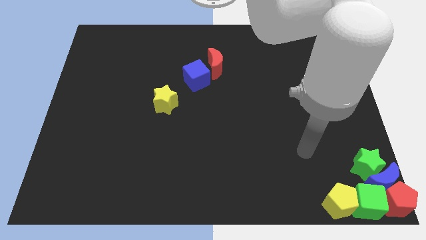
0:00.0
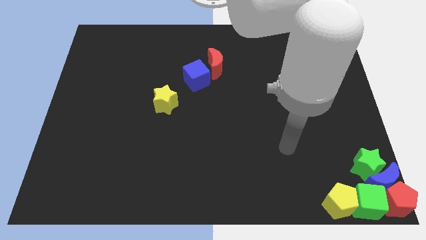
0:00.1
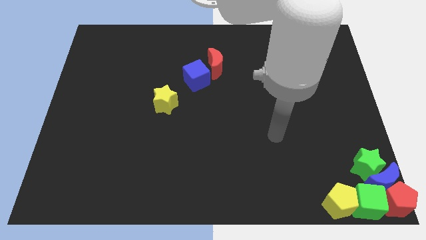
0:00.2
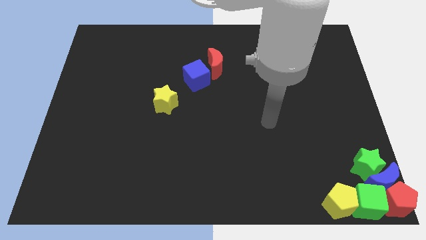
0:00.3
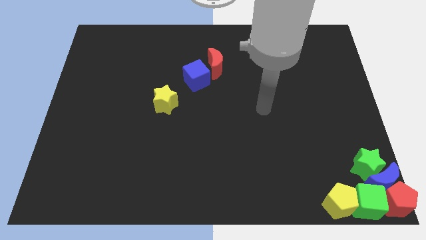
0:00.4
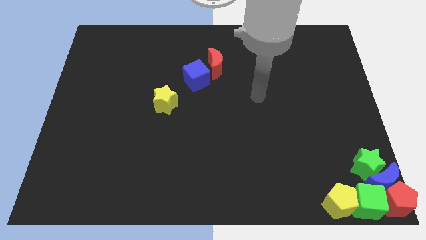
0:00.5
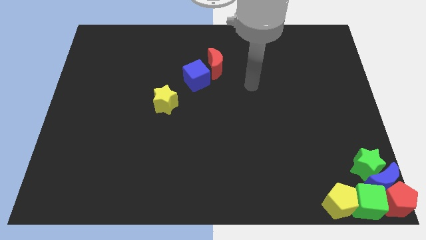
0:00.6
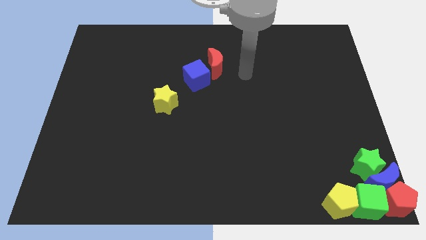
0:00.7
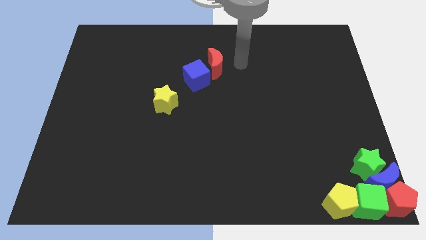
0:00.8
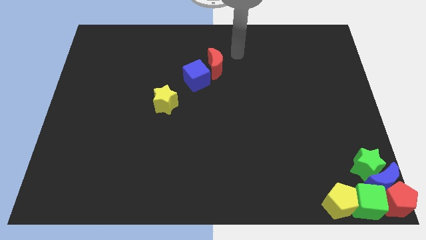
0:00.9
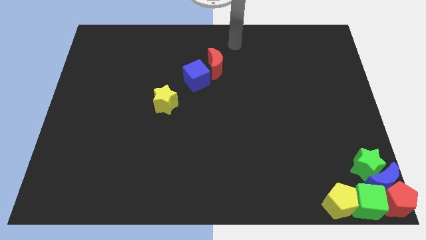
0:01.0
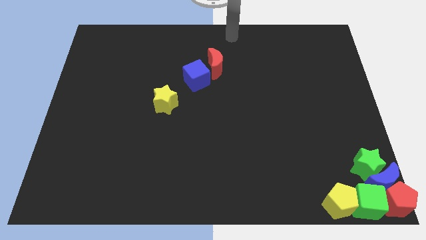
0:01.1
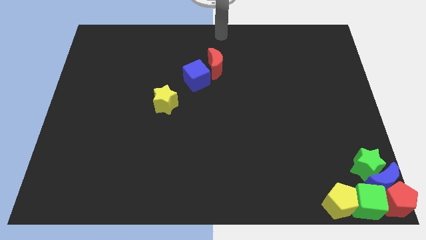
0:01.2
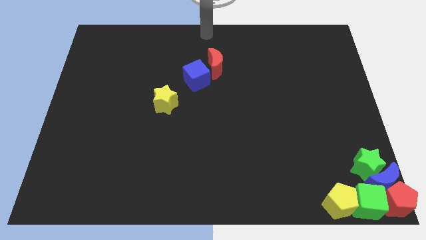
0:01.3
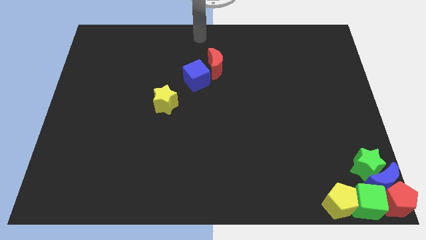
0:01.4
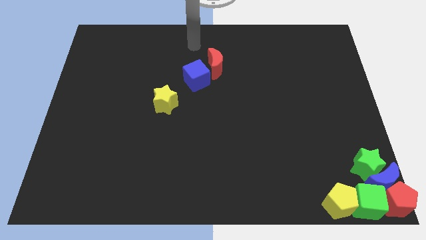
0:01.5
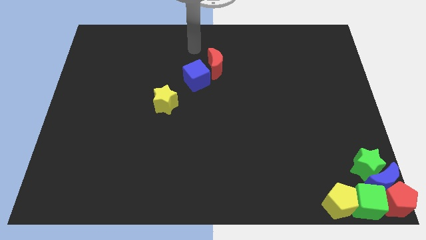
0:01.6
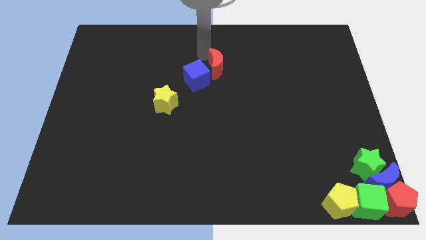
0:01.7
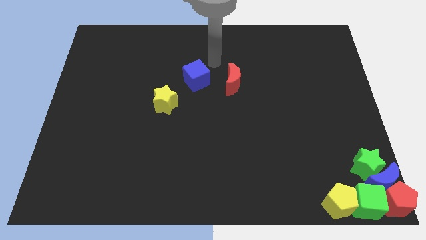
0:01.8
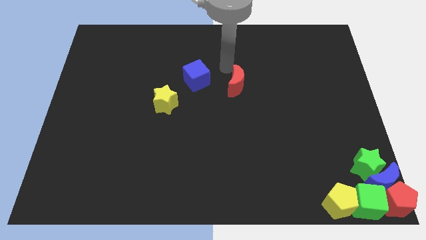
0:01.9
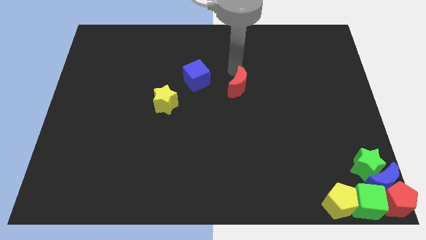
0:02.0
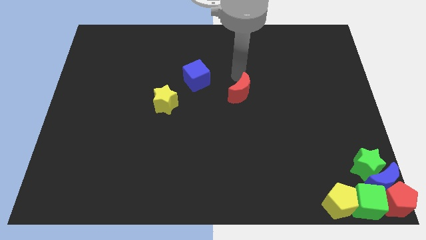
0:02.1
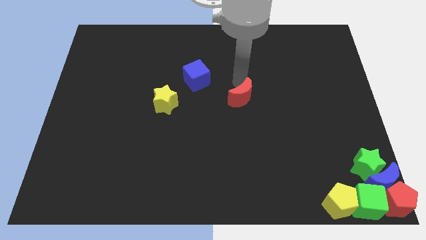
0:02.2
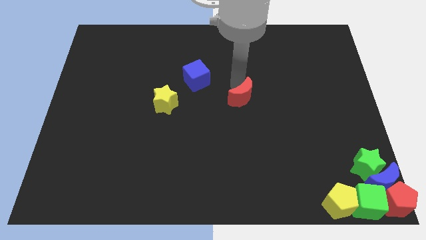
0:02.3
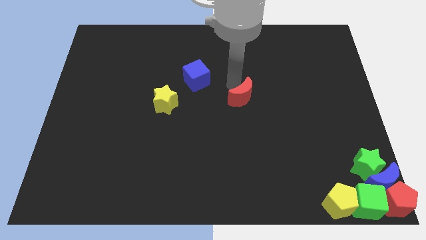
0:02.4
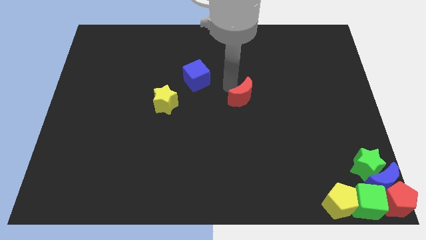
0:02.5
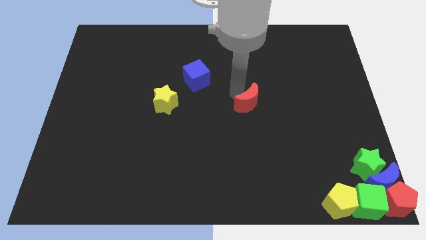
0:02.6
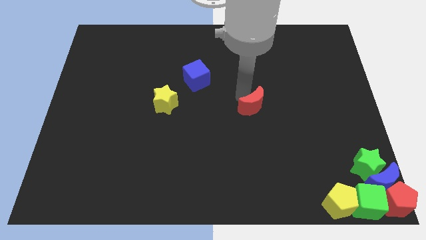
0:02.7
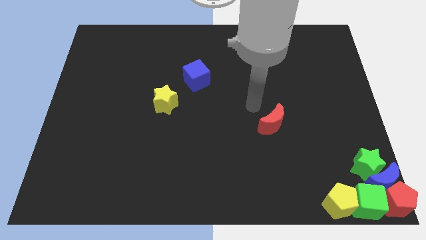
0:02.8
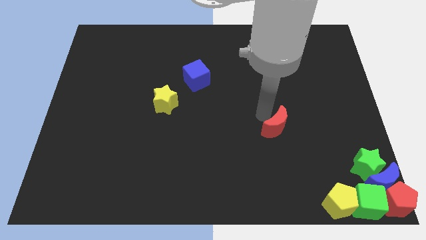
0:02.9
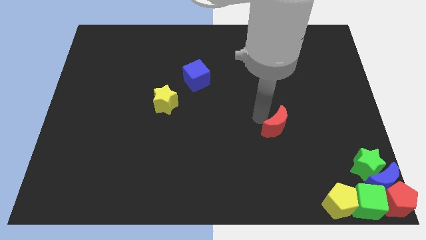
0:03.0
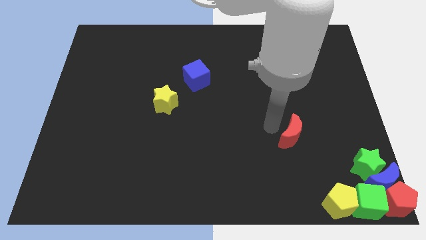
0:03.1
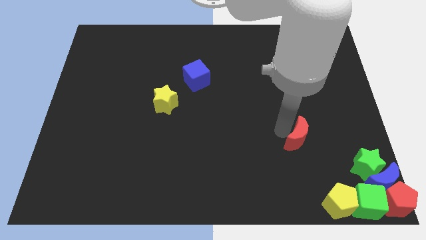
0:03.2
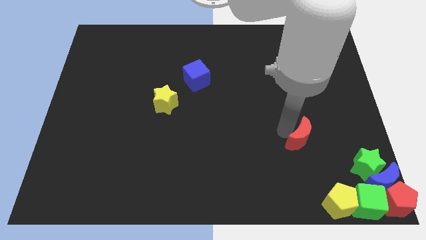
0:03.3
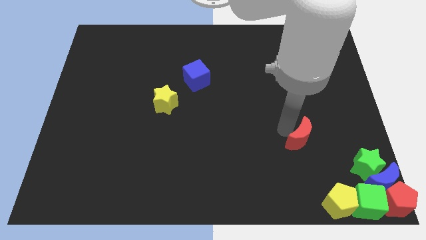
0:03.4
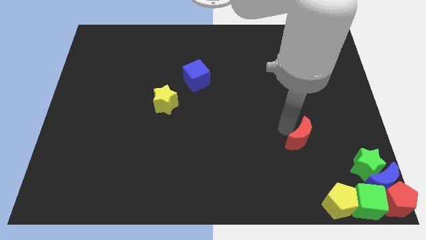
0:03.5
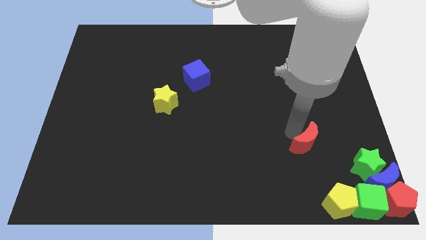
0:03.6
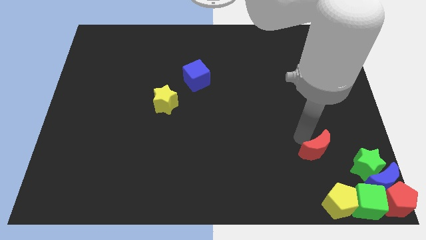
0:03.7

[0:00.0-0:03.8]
place the red moon in between the blue cube and yellow pentgaon

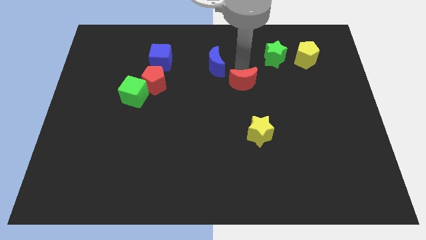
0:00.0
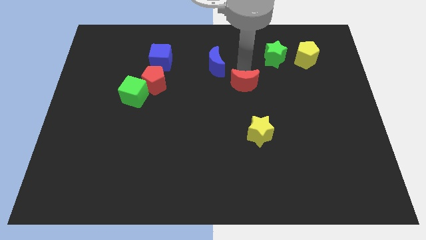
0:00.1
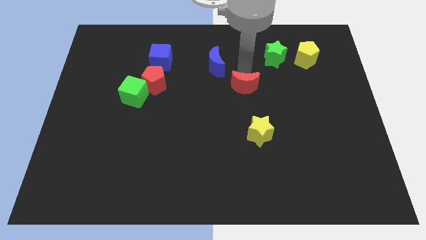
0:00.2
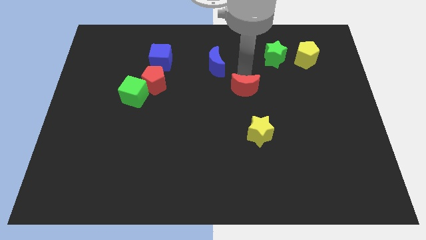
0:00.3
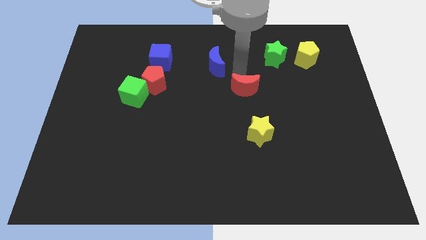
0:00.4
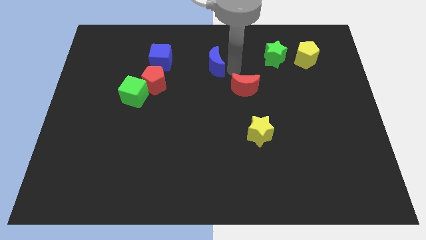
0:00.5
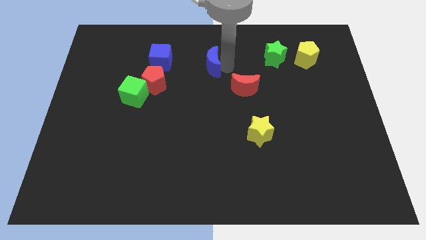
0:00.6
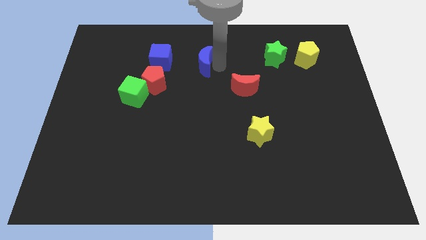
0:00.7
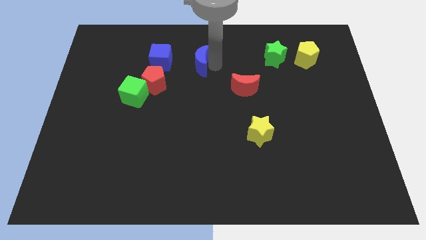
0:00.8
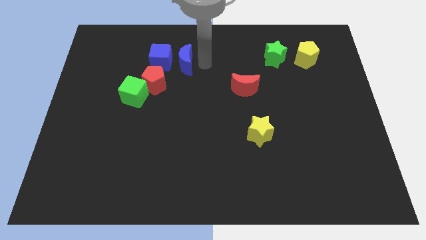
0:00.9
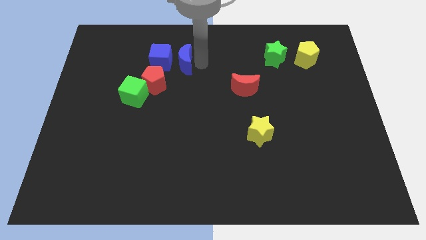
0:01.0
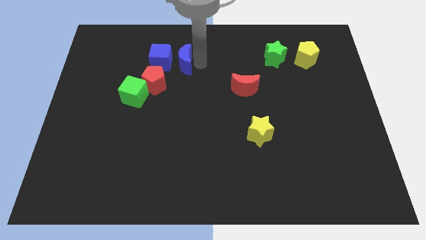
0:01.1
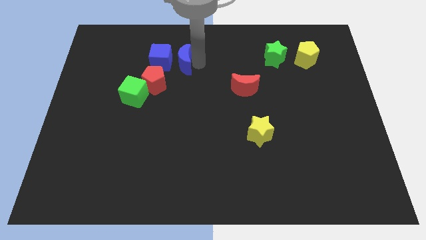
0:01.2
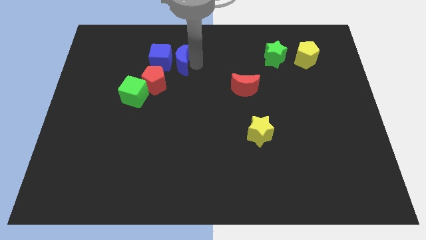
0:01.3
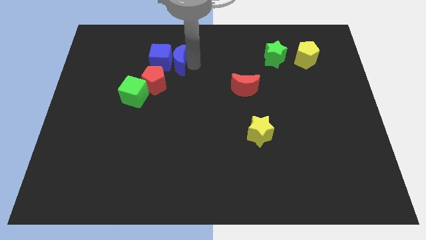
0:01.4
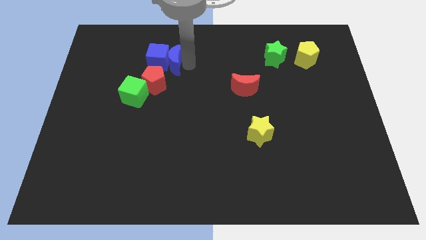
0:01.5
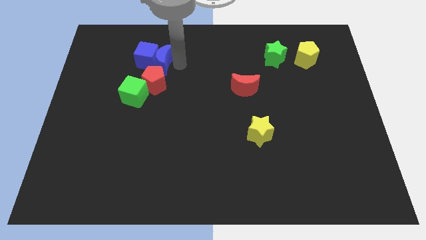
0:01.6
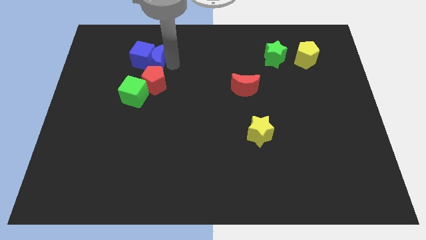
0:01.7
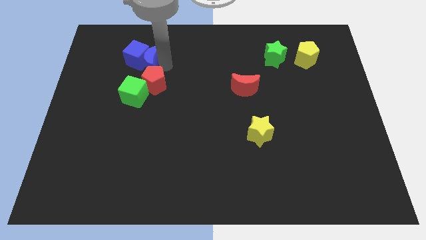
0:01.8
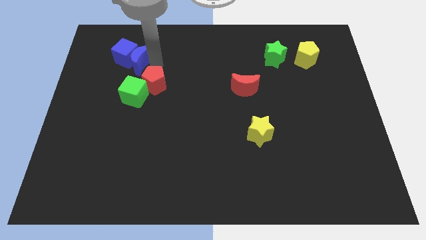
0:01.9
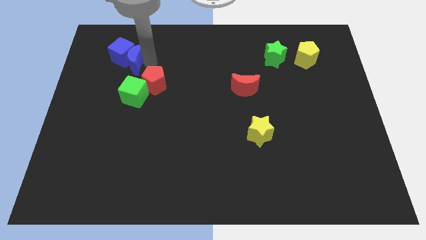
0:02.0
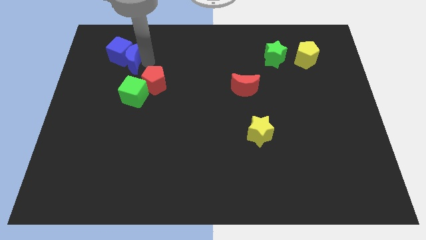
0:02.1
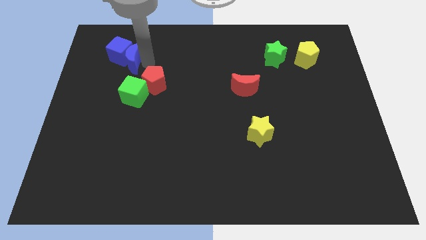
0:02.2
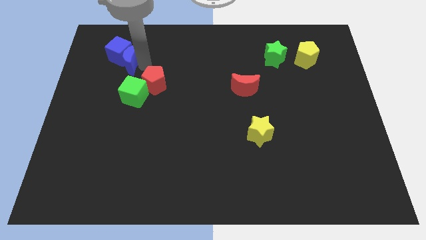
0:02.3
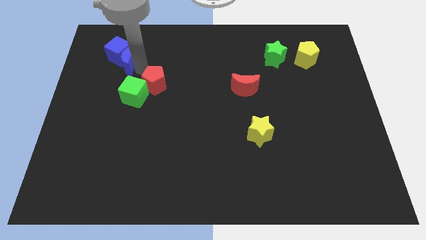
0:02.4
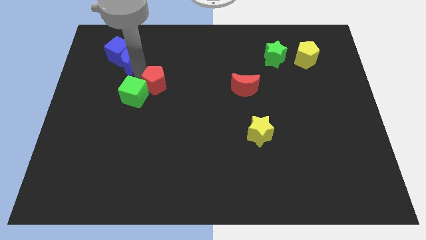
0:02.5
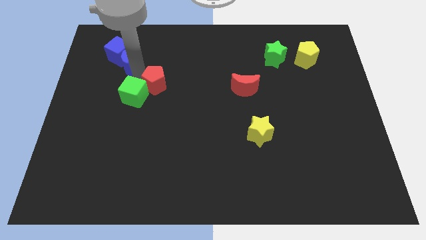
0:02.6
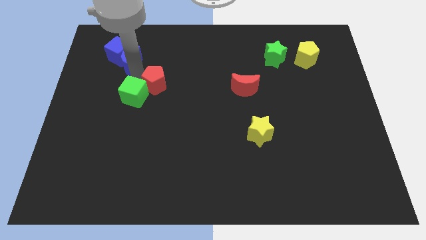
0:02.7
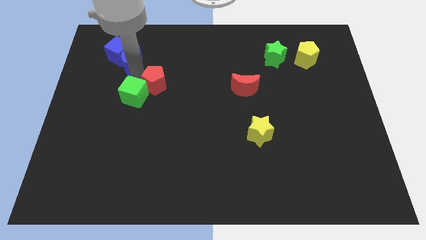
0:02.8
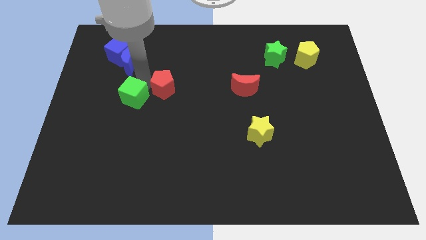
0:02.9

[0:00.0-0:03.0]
push the blue moon into the blue cube

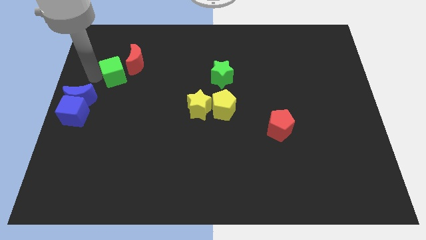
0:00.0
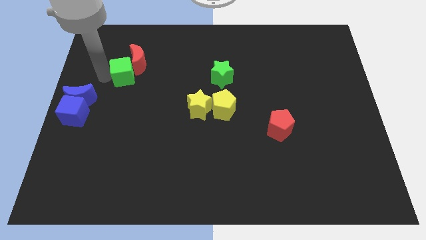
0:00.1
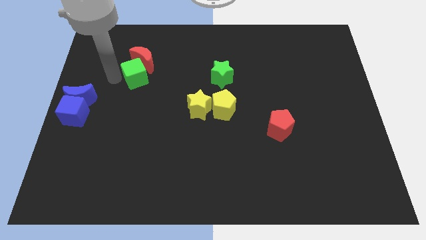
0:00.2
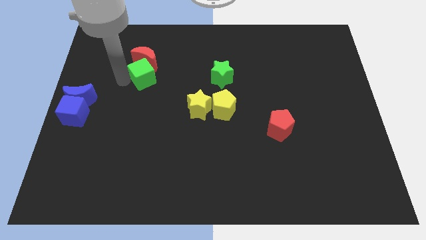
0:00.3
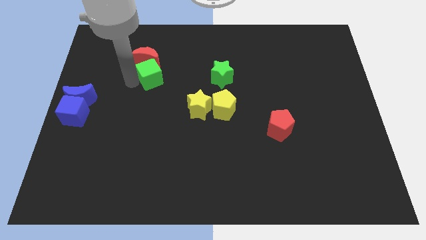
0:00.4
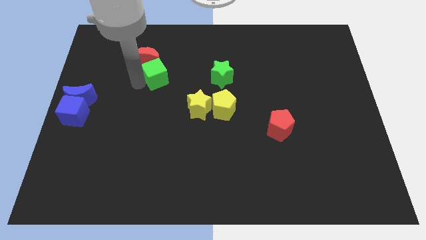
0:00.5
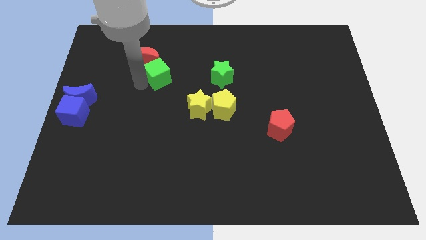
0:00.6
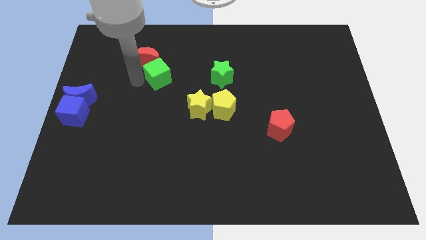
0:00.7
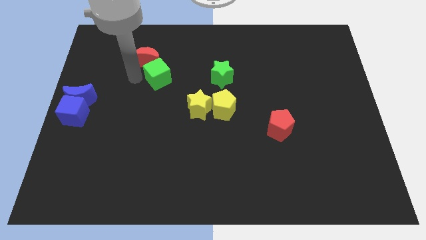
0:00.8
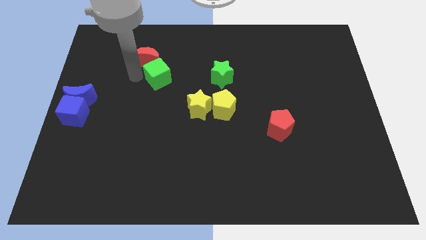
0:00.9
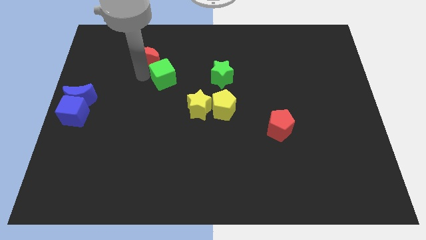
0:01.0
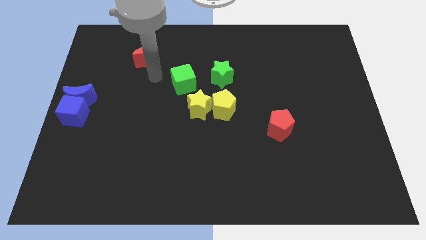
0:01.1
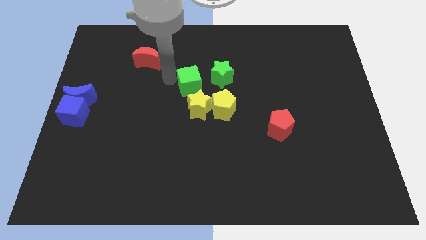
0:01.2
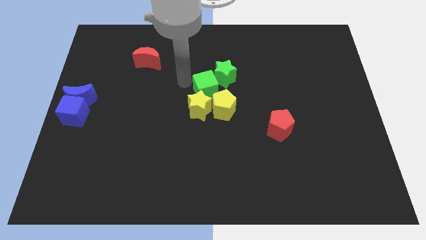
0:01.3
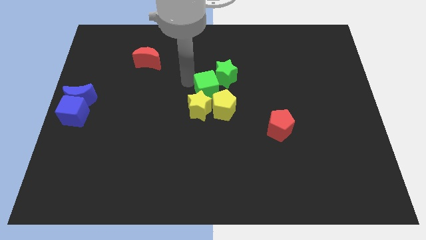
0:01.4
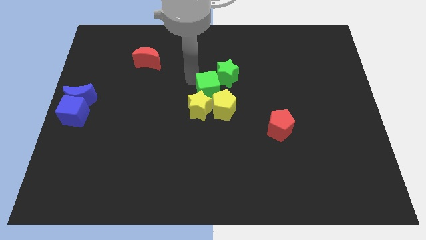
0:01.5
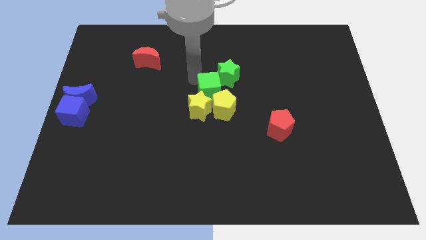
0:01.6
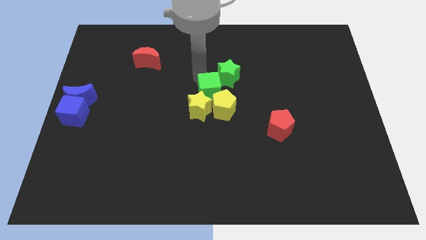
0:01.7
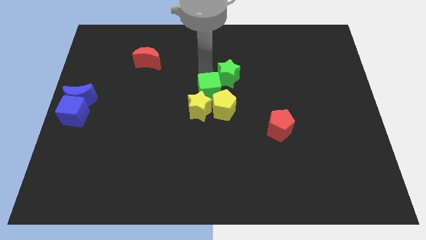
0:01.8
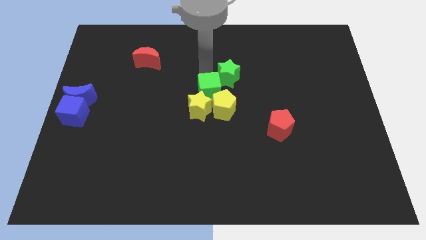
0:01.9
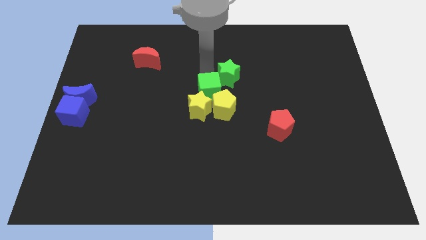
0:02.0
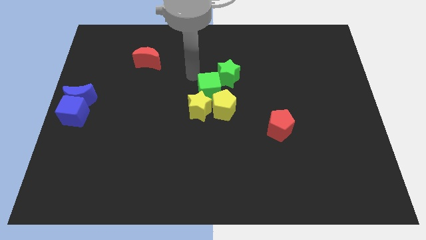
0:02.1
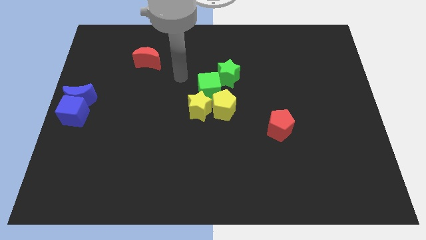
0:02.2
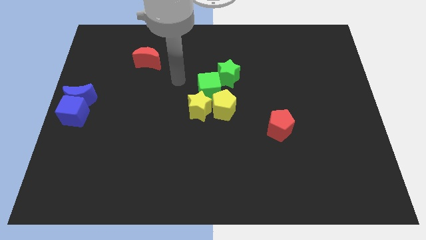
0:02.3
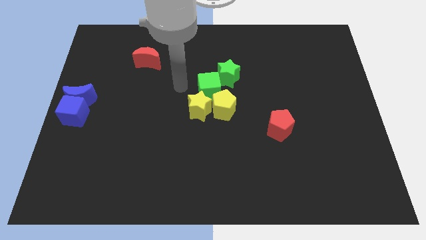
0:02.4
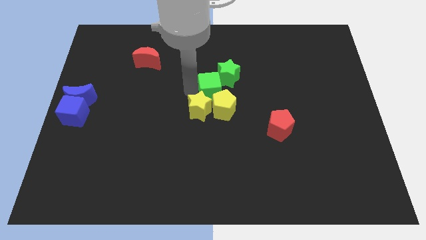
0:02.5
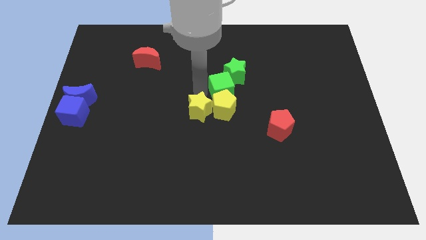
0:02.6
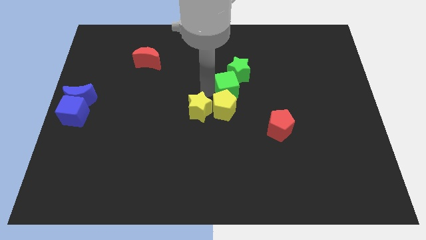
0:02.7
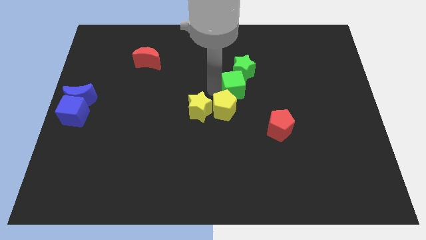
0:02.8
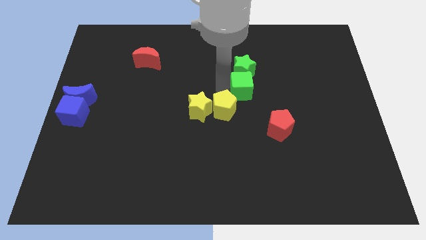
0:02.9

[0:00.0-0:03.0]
push the green cube to the top right of the yellow pentagon
